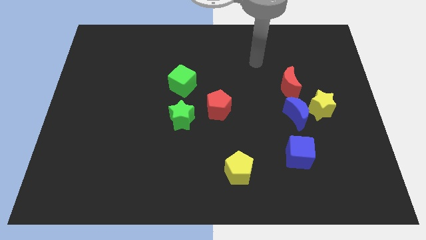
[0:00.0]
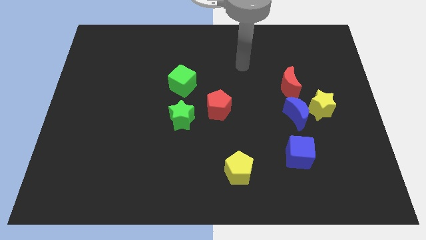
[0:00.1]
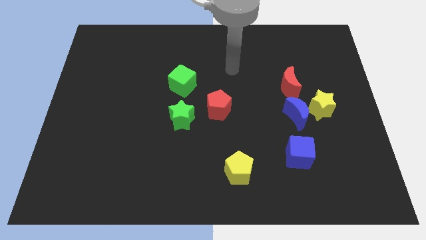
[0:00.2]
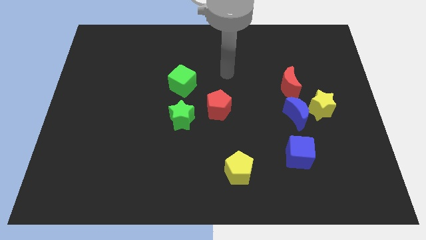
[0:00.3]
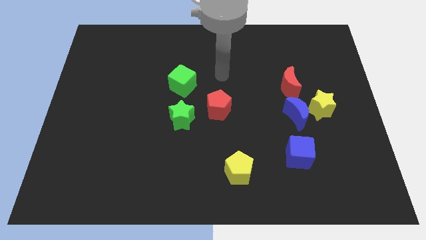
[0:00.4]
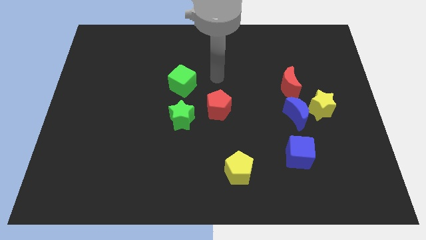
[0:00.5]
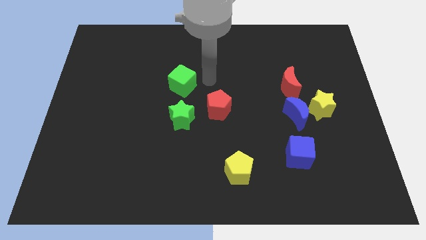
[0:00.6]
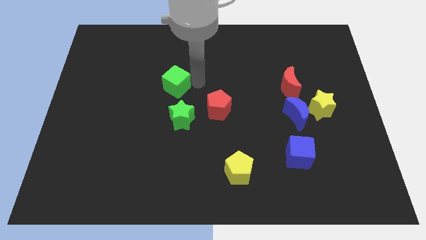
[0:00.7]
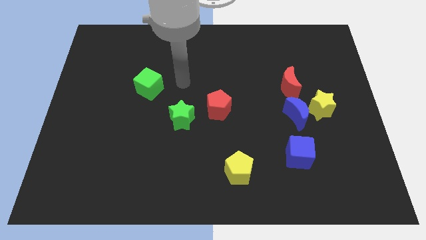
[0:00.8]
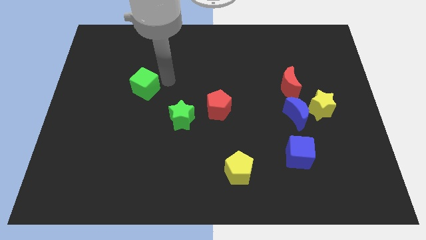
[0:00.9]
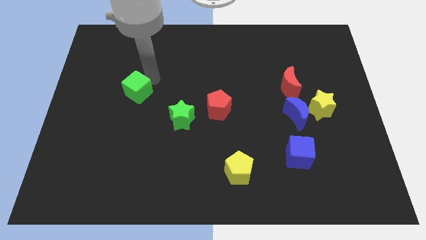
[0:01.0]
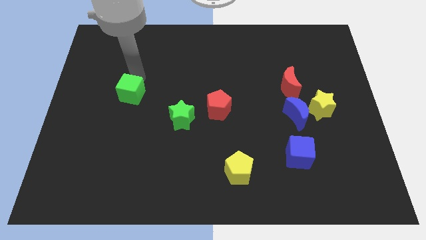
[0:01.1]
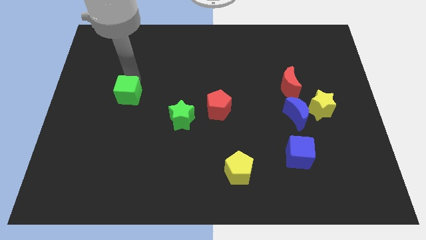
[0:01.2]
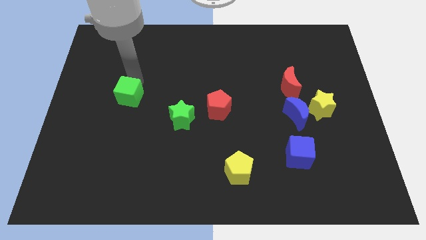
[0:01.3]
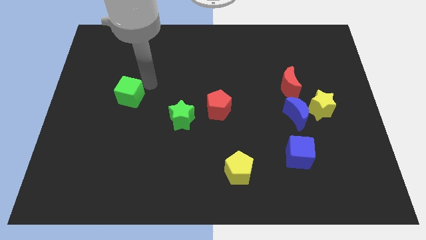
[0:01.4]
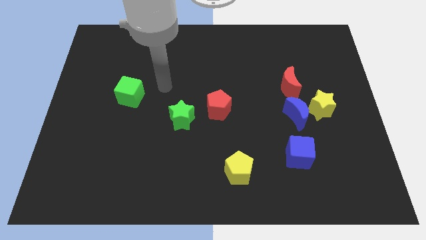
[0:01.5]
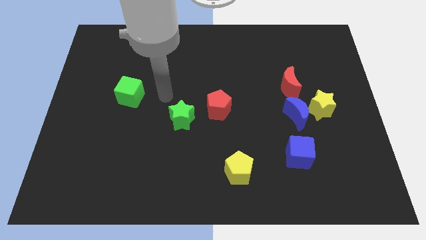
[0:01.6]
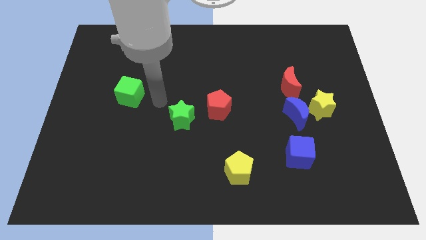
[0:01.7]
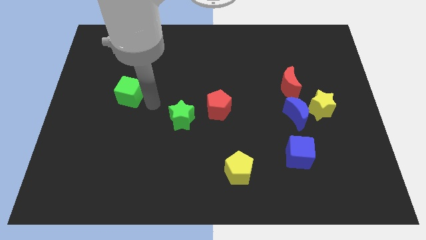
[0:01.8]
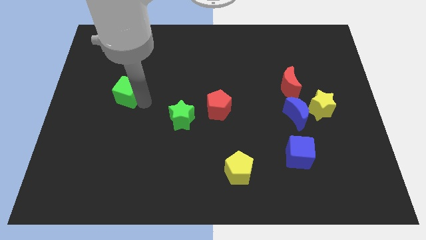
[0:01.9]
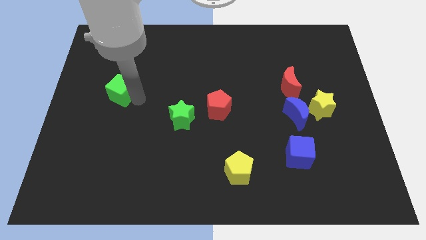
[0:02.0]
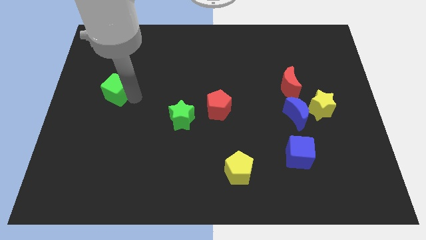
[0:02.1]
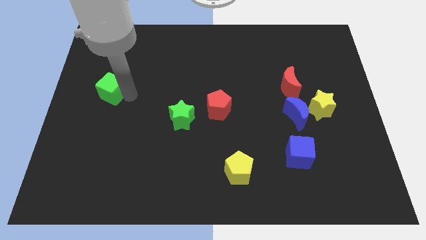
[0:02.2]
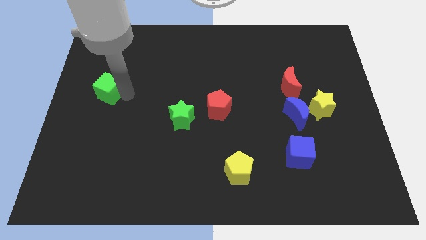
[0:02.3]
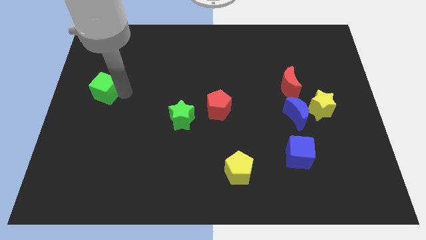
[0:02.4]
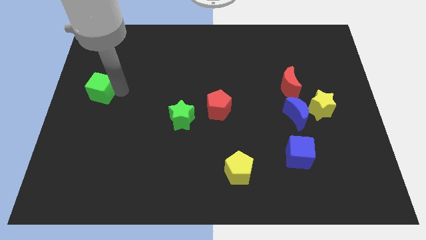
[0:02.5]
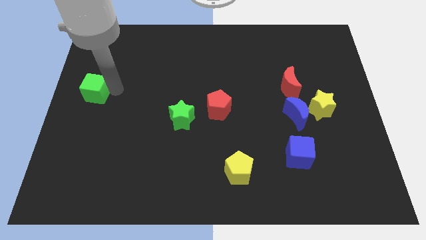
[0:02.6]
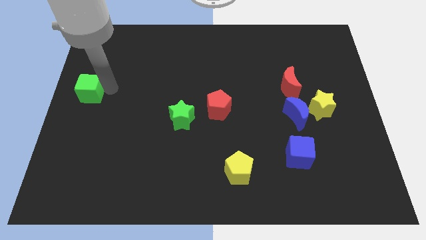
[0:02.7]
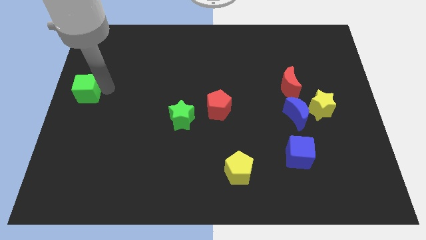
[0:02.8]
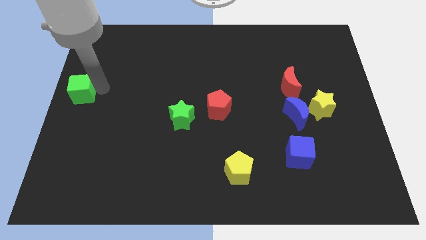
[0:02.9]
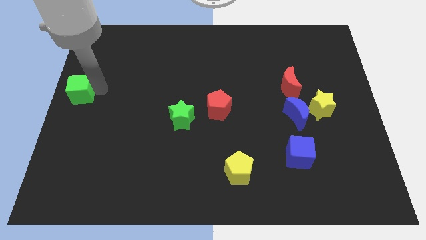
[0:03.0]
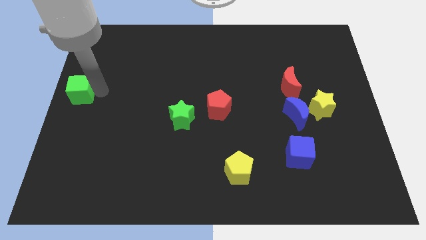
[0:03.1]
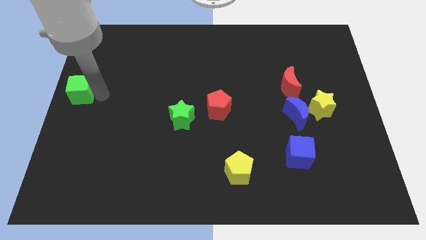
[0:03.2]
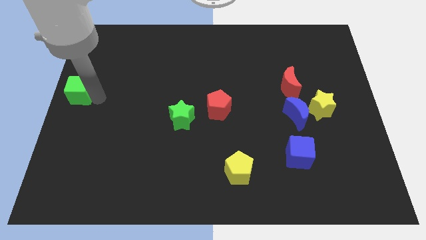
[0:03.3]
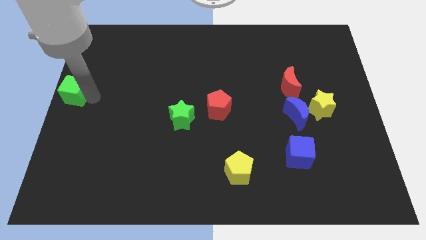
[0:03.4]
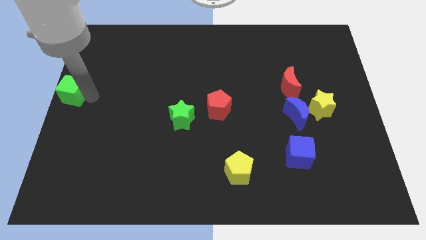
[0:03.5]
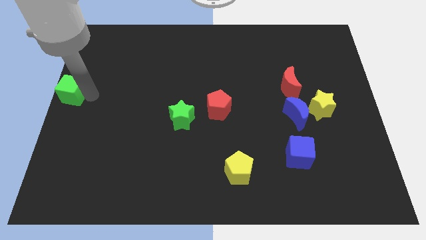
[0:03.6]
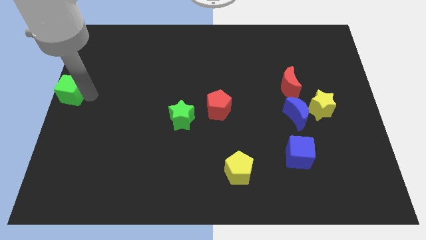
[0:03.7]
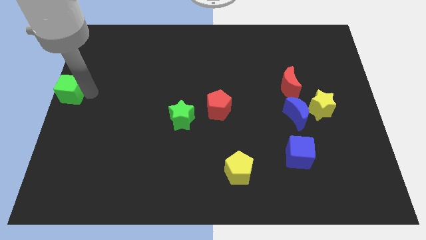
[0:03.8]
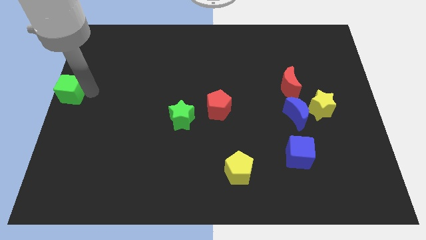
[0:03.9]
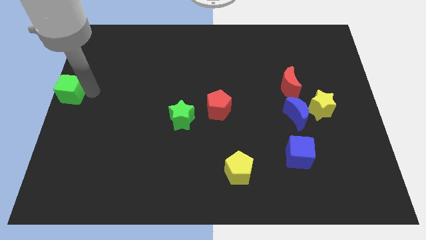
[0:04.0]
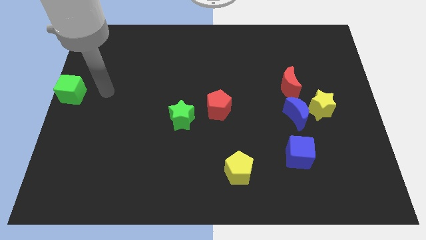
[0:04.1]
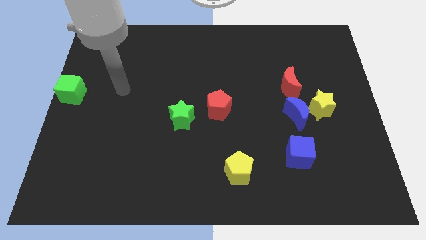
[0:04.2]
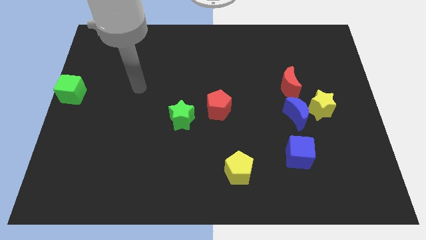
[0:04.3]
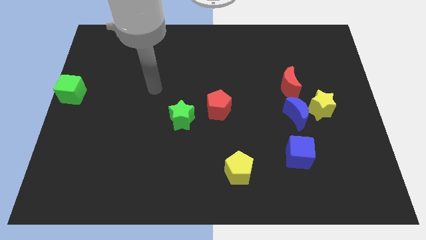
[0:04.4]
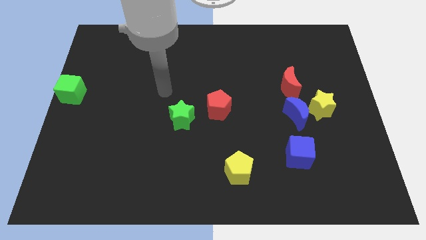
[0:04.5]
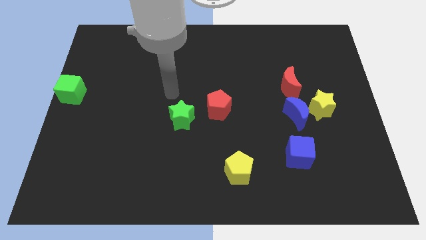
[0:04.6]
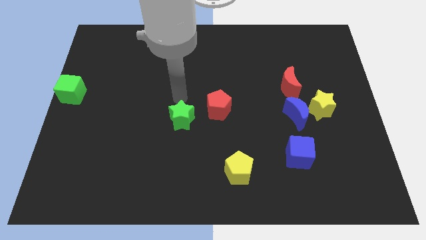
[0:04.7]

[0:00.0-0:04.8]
move the green cube to the left center of the board

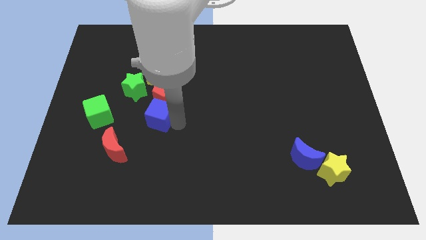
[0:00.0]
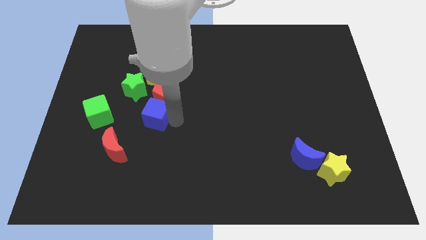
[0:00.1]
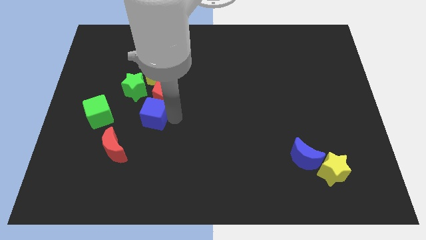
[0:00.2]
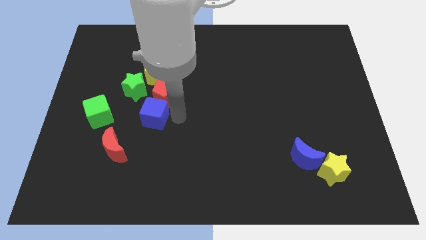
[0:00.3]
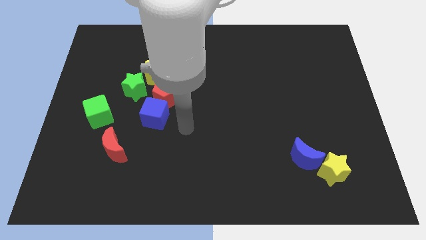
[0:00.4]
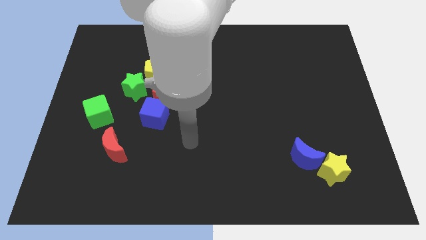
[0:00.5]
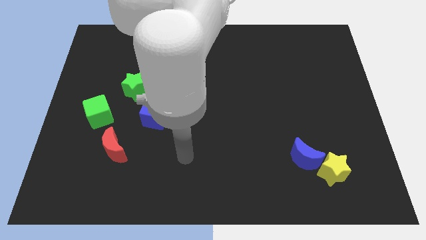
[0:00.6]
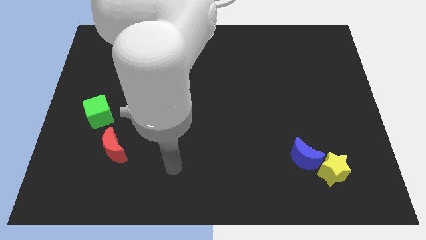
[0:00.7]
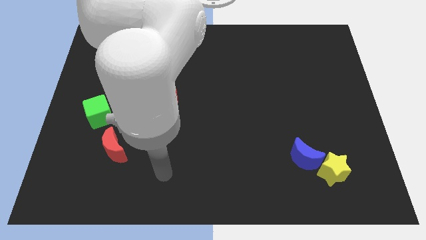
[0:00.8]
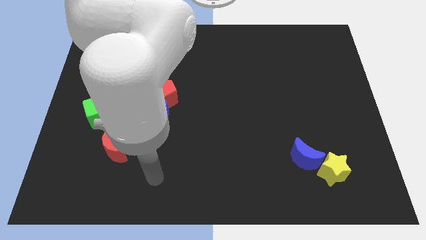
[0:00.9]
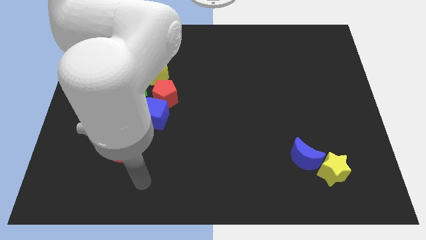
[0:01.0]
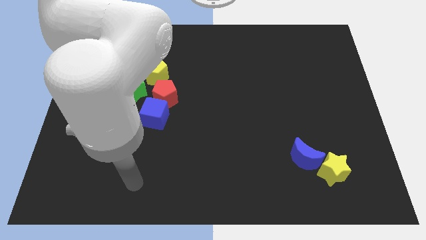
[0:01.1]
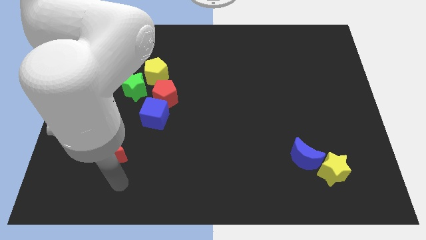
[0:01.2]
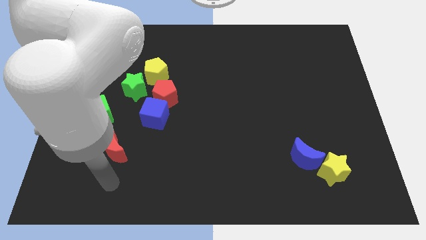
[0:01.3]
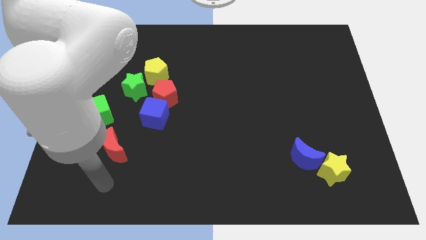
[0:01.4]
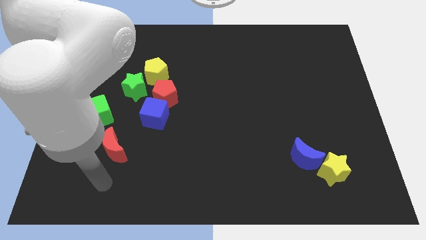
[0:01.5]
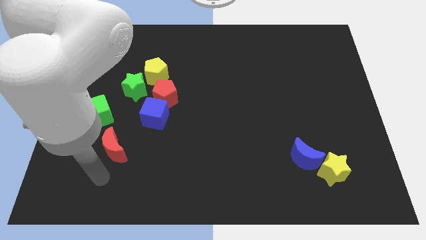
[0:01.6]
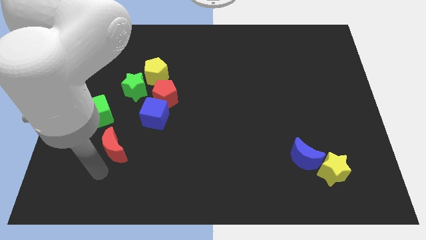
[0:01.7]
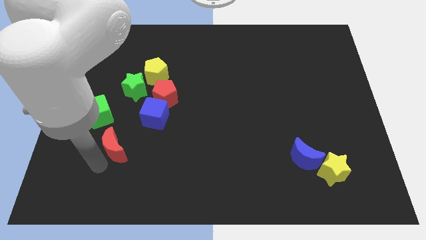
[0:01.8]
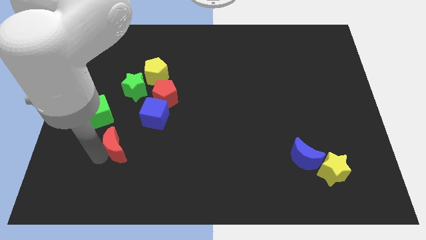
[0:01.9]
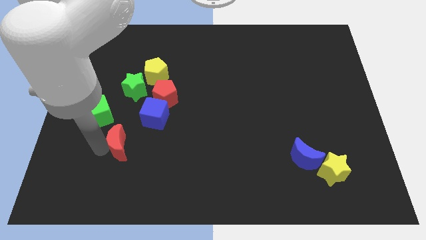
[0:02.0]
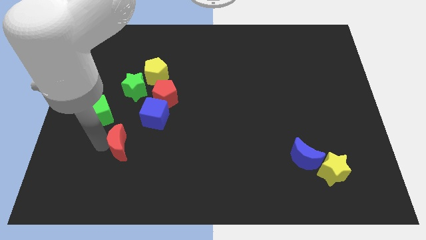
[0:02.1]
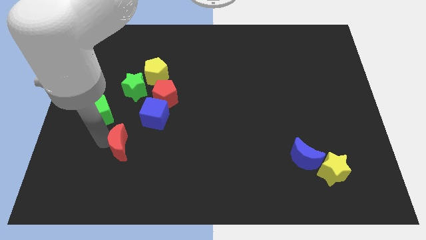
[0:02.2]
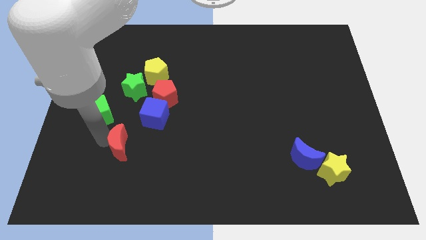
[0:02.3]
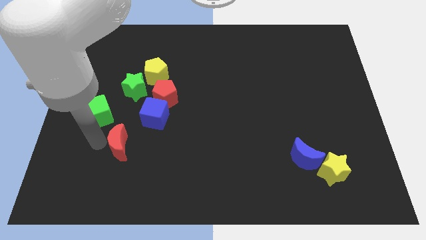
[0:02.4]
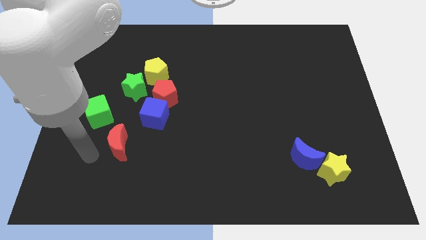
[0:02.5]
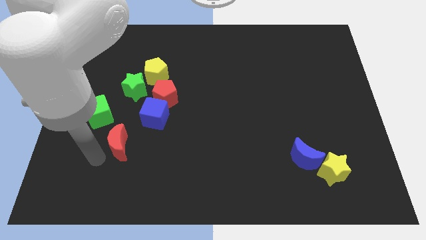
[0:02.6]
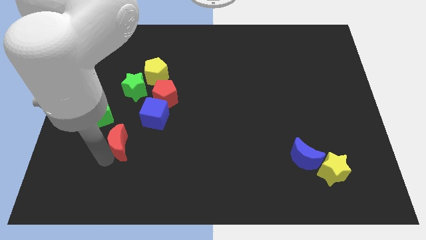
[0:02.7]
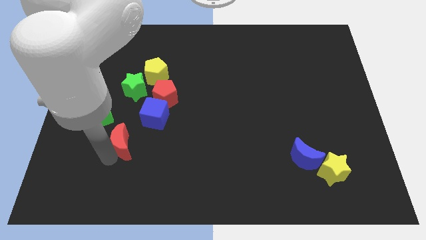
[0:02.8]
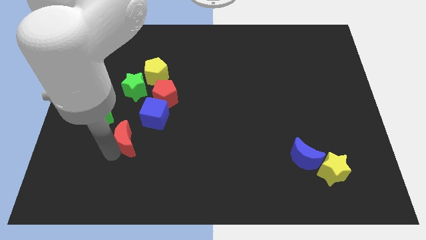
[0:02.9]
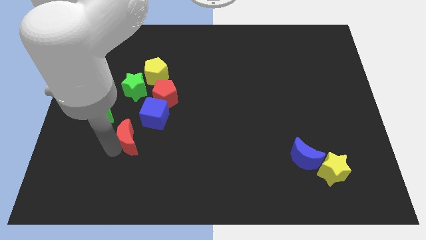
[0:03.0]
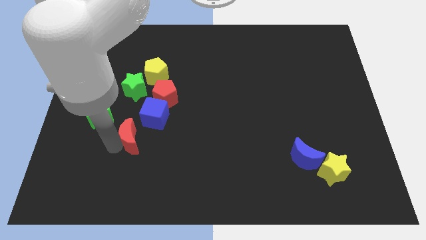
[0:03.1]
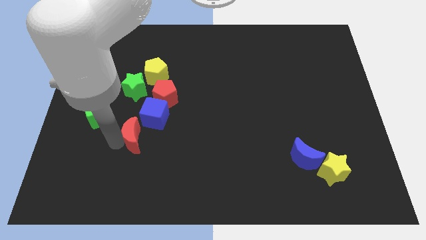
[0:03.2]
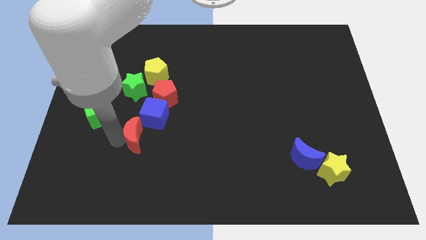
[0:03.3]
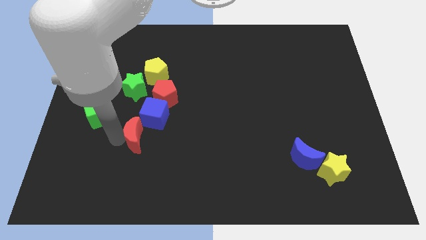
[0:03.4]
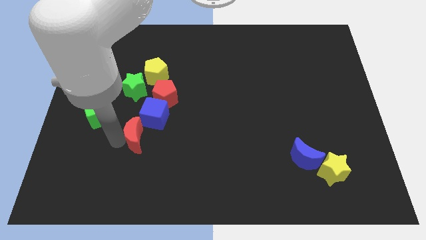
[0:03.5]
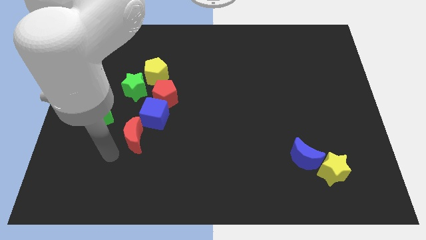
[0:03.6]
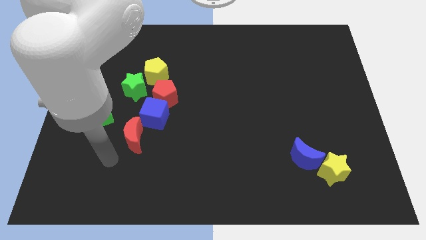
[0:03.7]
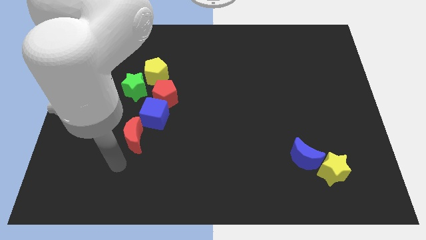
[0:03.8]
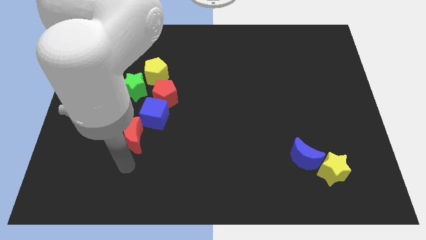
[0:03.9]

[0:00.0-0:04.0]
place red moon to the bottom of blue cube
